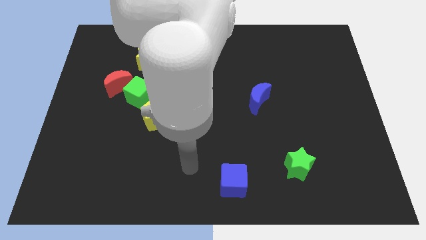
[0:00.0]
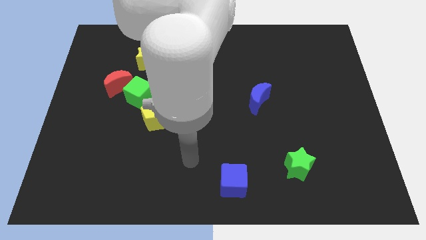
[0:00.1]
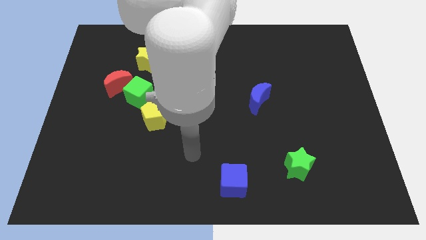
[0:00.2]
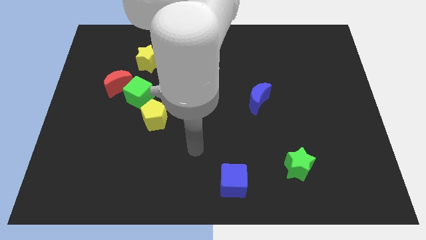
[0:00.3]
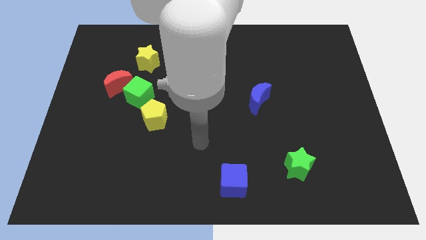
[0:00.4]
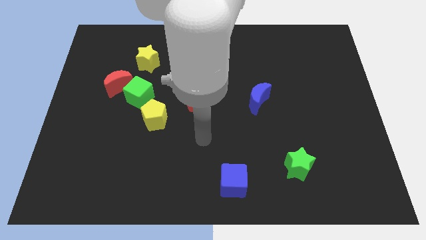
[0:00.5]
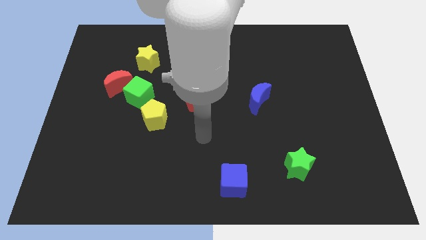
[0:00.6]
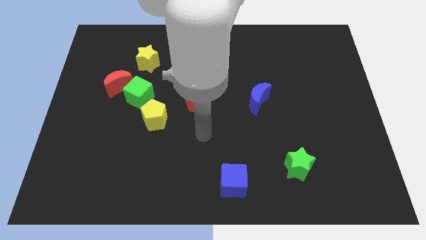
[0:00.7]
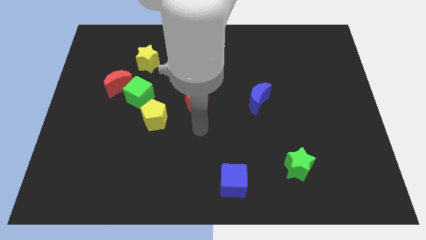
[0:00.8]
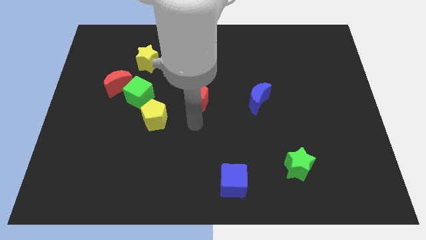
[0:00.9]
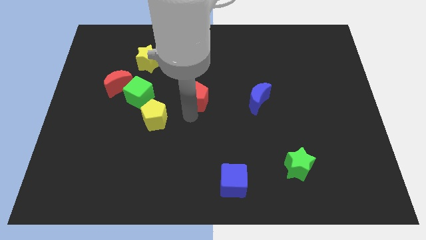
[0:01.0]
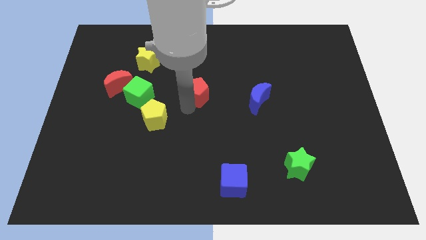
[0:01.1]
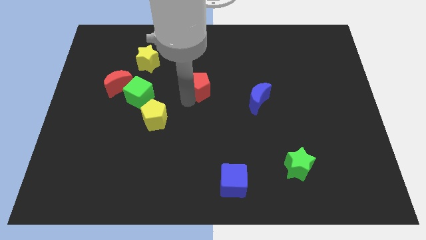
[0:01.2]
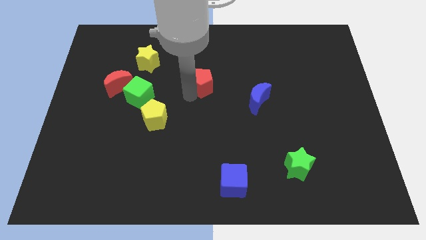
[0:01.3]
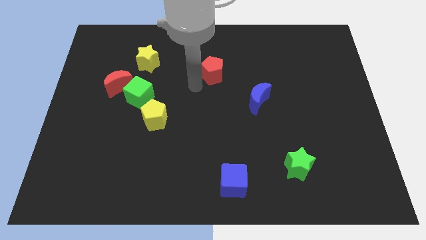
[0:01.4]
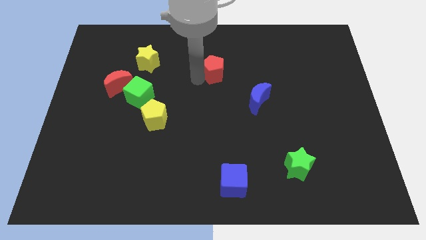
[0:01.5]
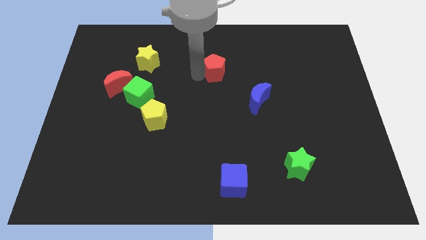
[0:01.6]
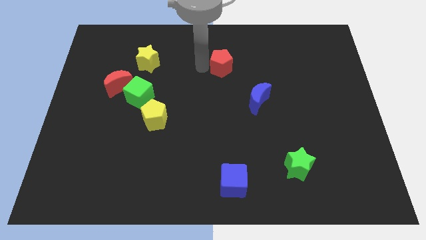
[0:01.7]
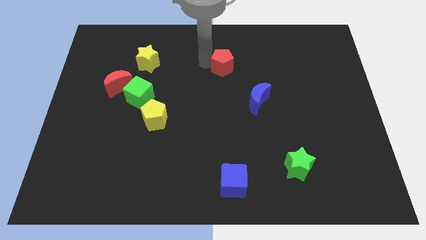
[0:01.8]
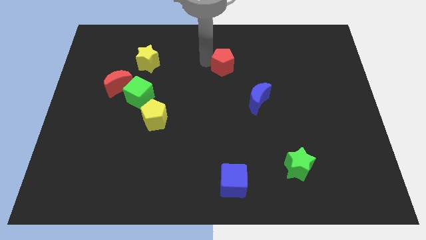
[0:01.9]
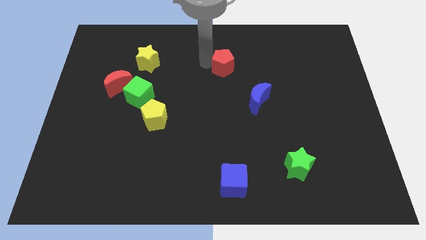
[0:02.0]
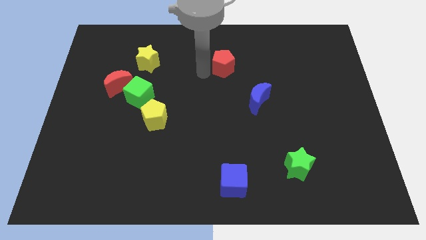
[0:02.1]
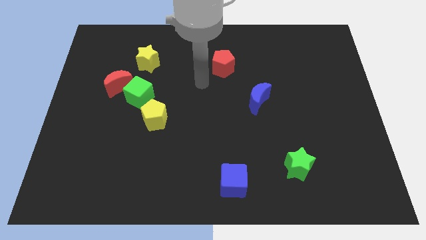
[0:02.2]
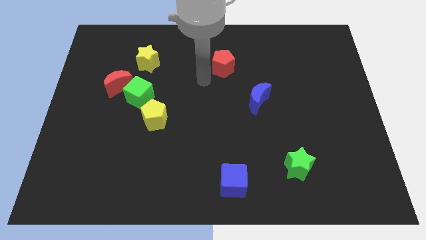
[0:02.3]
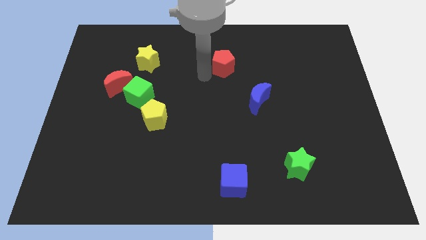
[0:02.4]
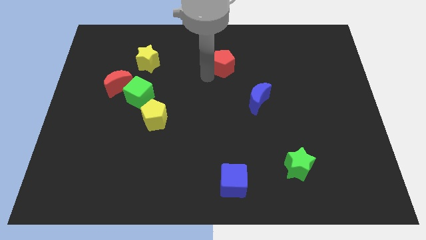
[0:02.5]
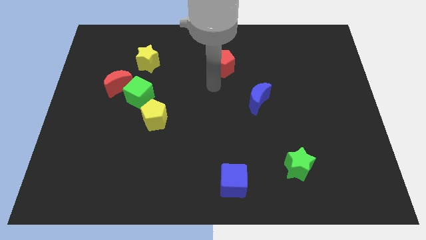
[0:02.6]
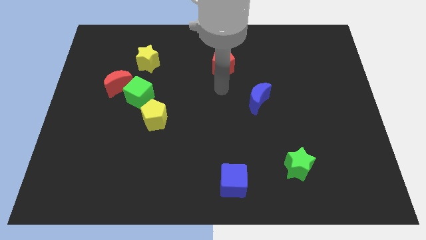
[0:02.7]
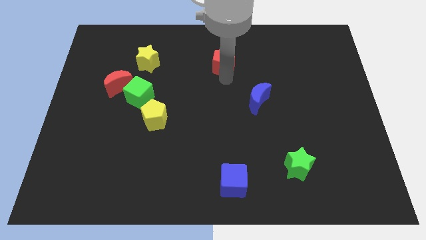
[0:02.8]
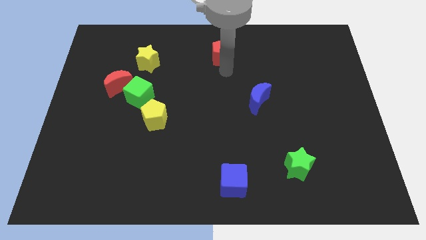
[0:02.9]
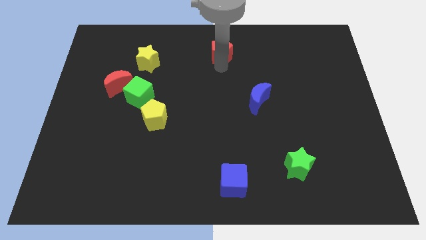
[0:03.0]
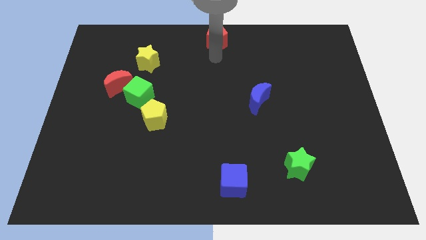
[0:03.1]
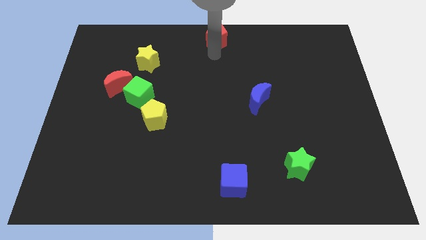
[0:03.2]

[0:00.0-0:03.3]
push the red pentagon diagonal to the top left of the blue crescent

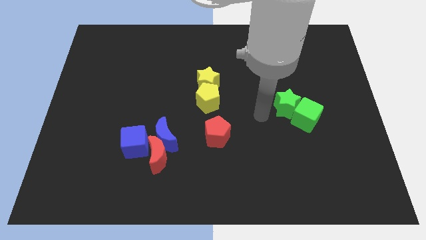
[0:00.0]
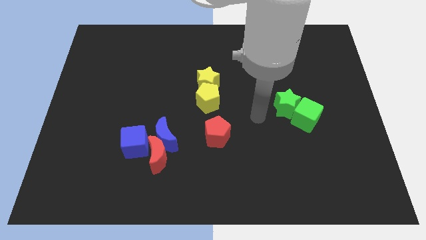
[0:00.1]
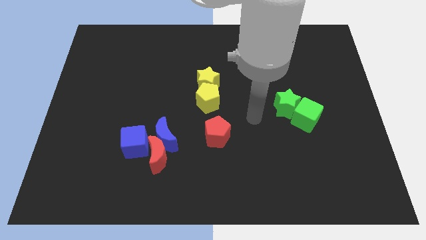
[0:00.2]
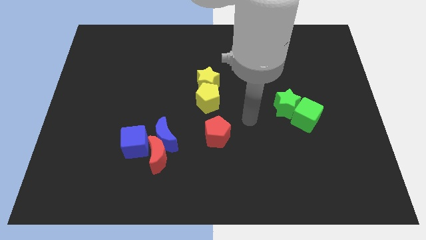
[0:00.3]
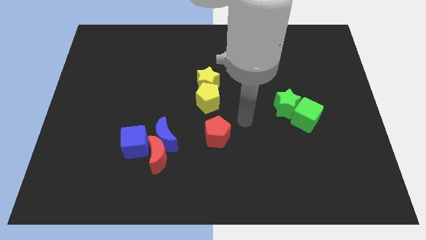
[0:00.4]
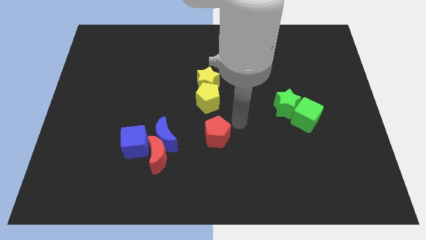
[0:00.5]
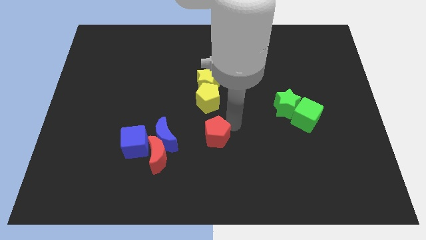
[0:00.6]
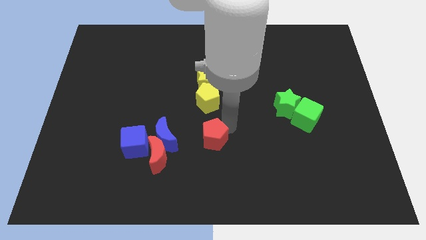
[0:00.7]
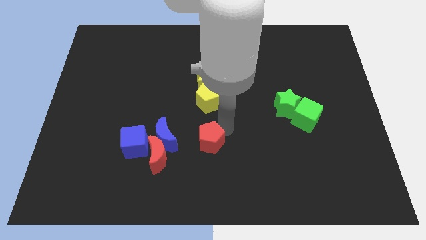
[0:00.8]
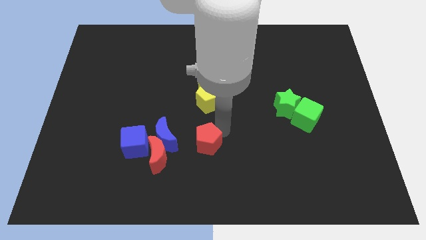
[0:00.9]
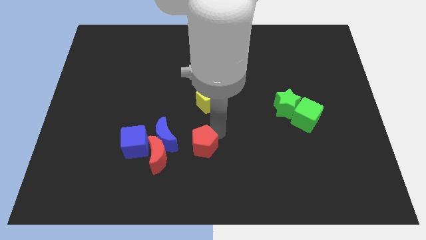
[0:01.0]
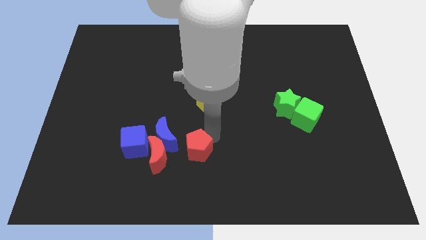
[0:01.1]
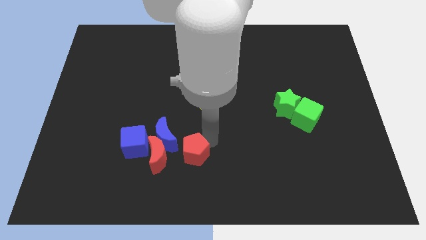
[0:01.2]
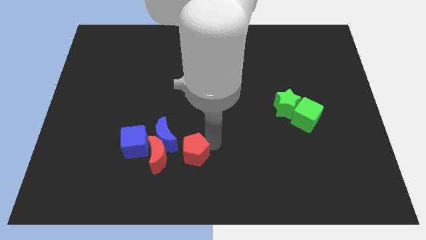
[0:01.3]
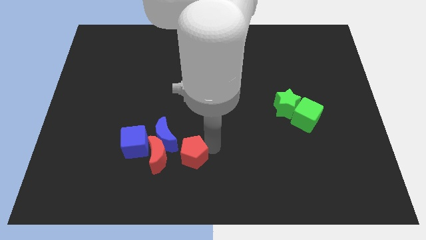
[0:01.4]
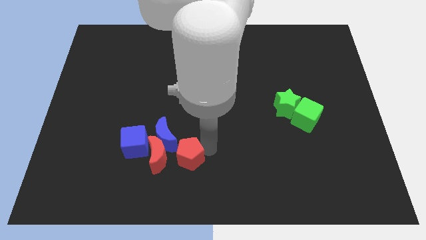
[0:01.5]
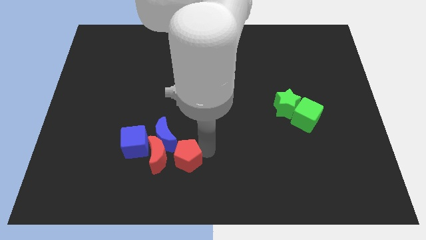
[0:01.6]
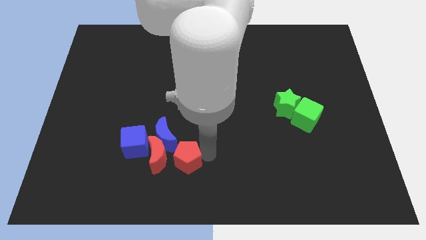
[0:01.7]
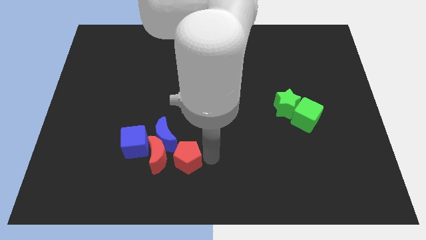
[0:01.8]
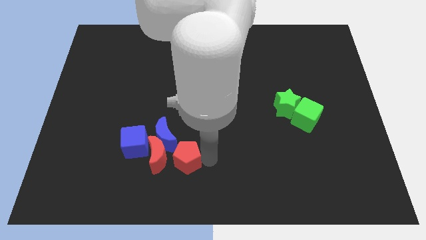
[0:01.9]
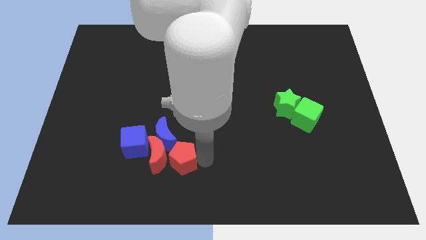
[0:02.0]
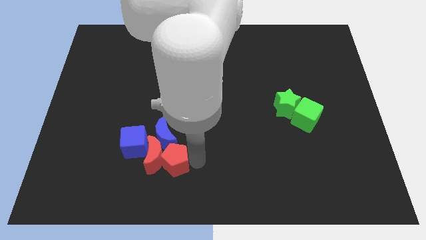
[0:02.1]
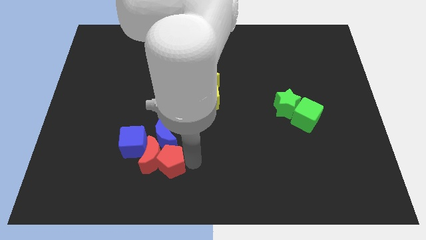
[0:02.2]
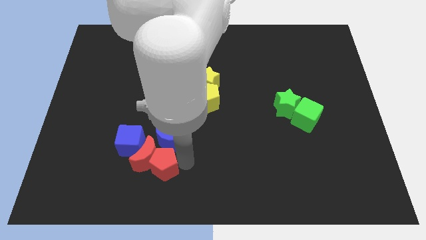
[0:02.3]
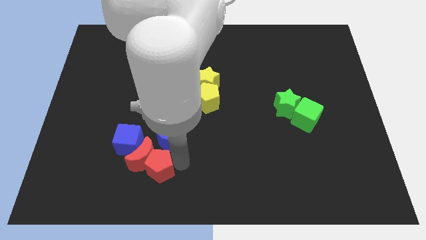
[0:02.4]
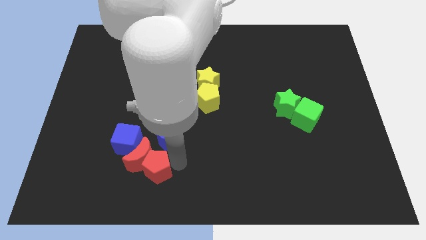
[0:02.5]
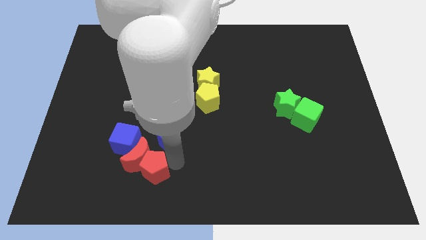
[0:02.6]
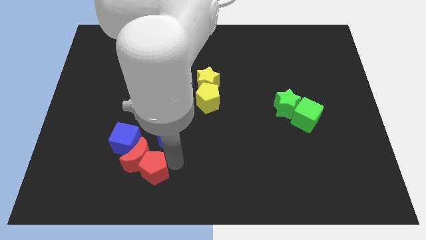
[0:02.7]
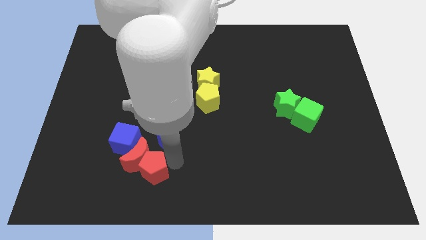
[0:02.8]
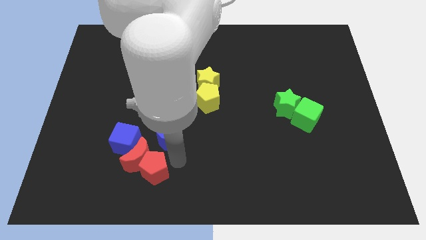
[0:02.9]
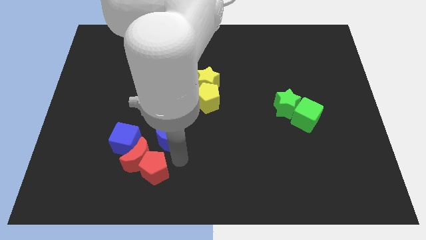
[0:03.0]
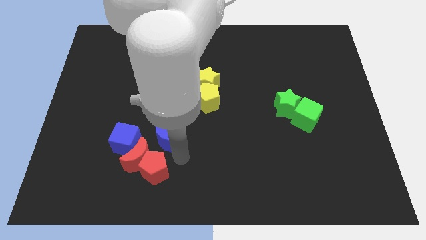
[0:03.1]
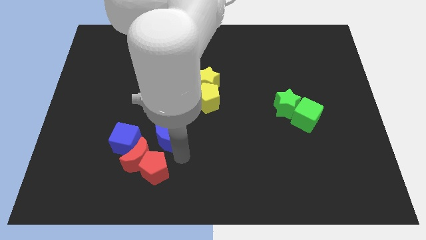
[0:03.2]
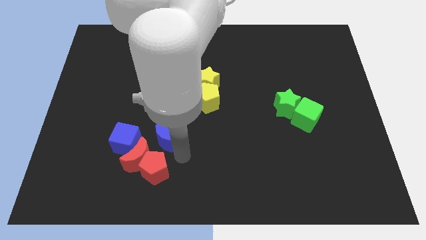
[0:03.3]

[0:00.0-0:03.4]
push the red pentagon to the bottom right side of the red crescent

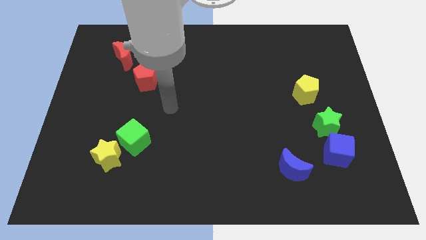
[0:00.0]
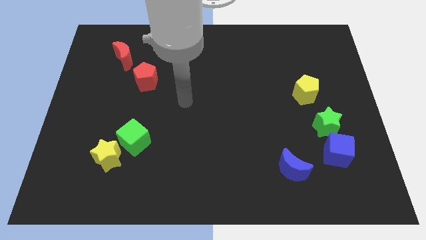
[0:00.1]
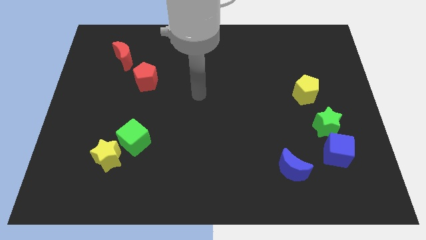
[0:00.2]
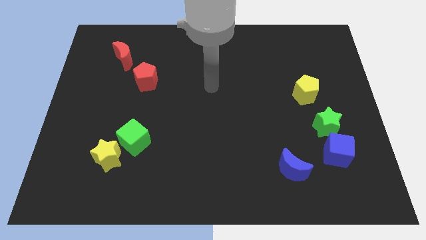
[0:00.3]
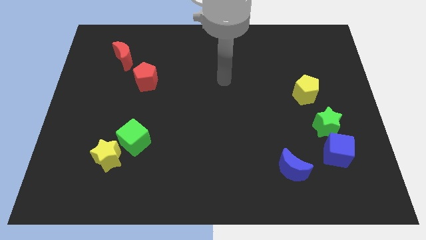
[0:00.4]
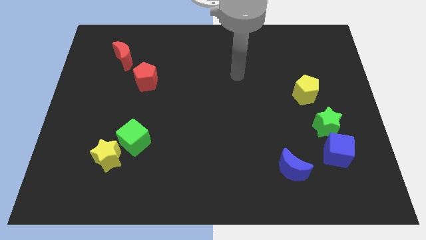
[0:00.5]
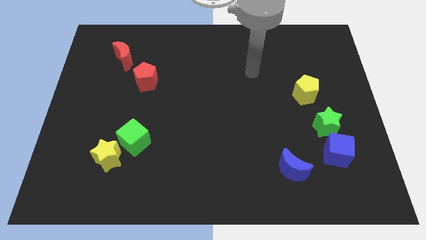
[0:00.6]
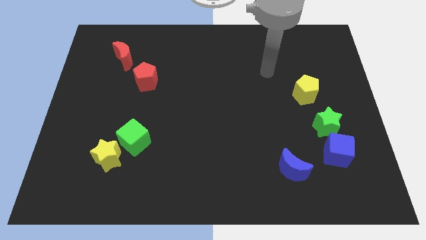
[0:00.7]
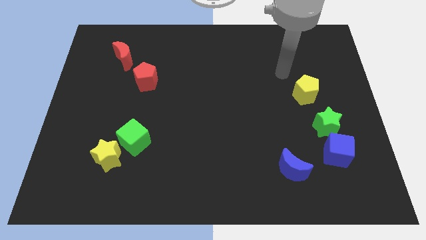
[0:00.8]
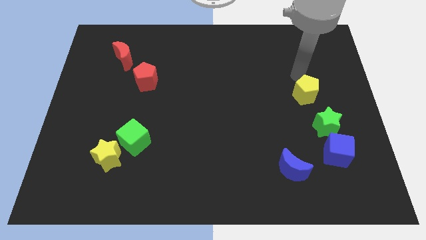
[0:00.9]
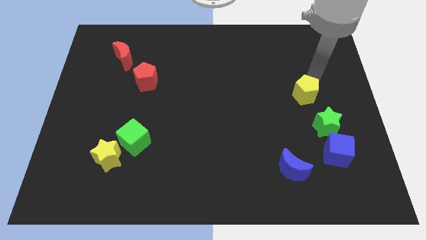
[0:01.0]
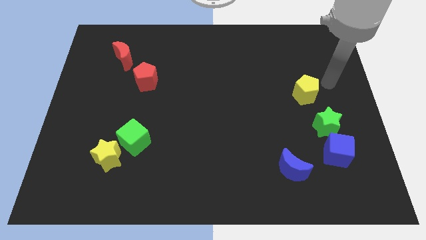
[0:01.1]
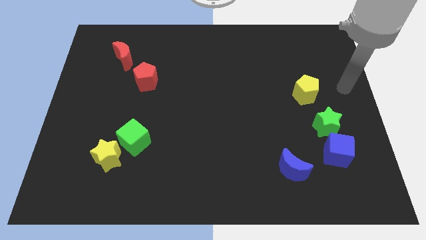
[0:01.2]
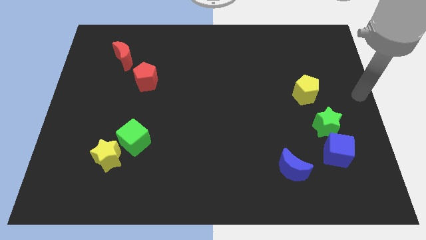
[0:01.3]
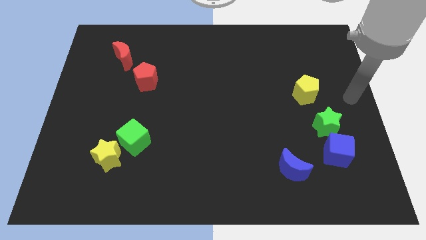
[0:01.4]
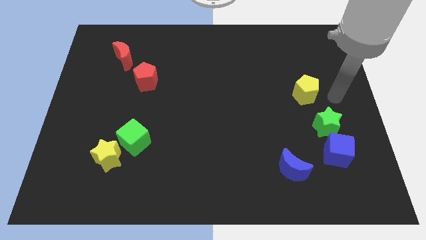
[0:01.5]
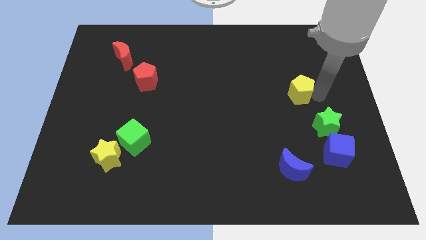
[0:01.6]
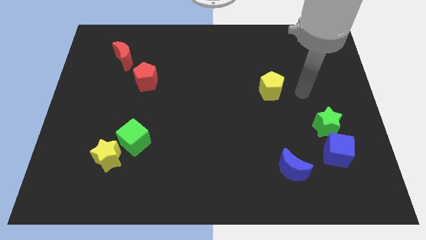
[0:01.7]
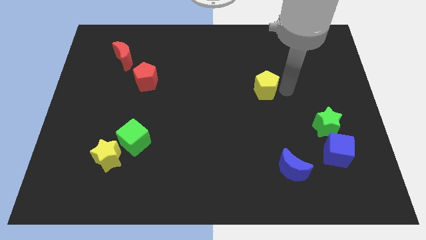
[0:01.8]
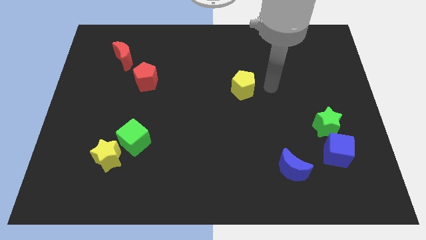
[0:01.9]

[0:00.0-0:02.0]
move yellow pentagon towards center

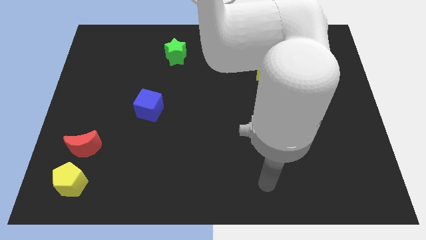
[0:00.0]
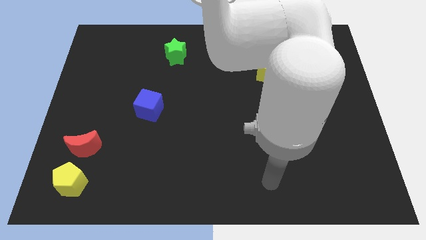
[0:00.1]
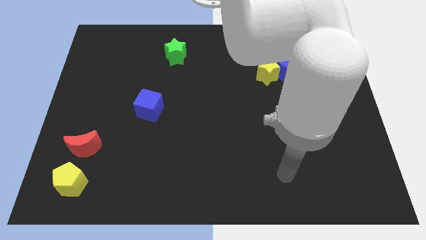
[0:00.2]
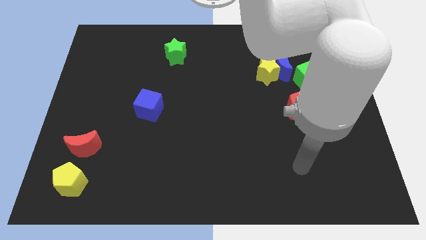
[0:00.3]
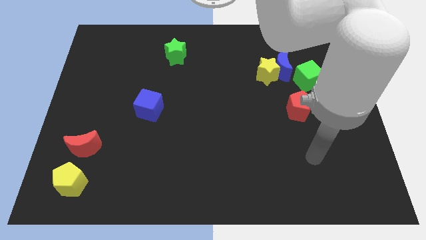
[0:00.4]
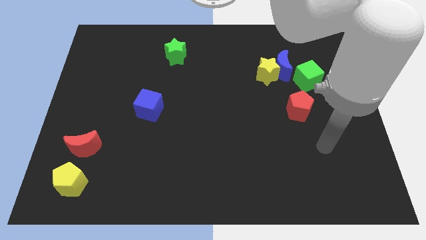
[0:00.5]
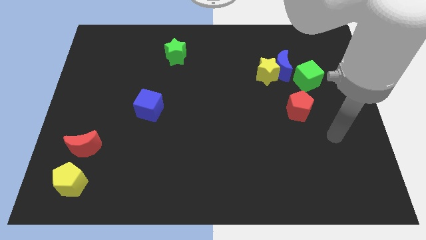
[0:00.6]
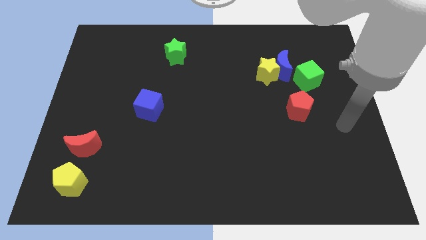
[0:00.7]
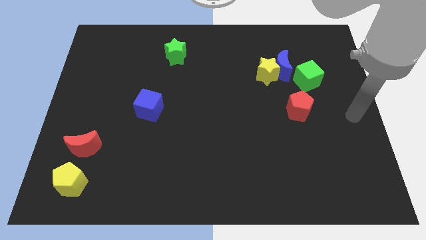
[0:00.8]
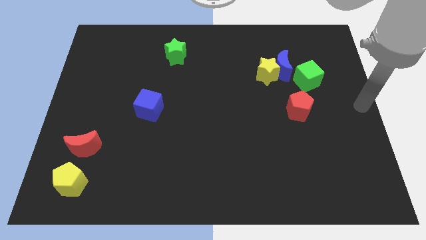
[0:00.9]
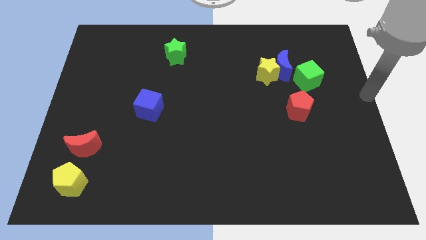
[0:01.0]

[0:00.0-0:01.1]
place your hand at the center right of the board
